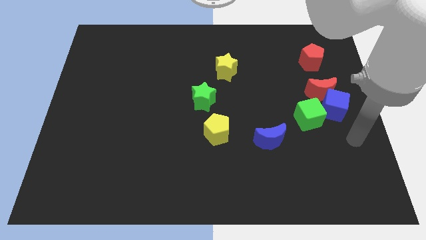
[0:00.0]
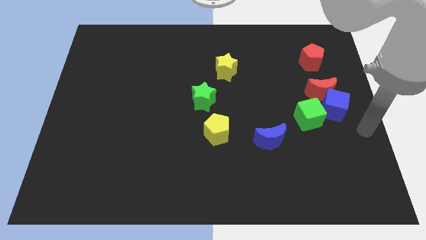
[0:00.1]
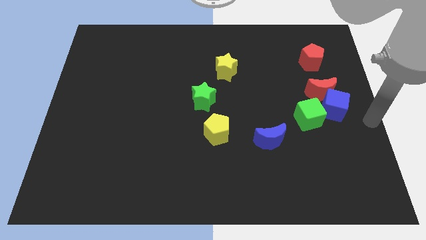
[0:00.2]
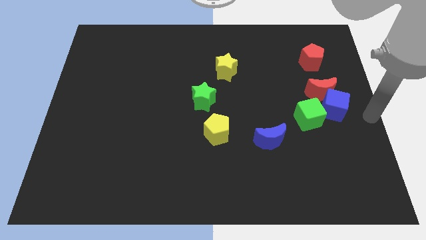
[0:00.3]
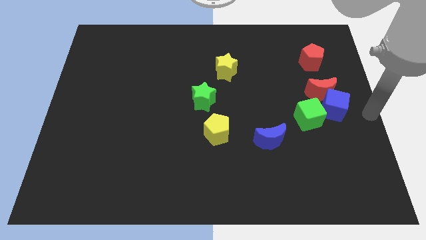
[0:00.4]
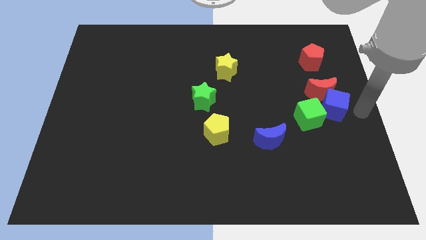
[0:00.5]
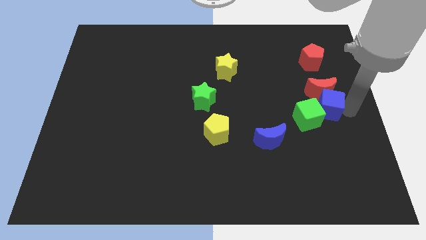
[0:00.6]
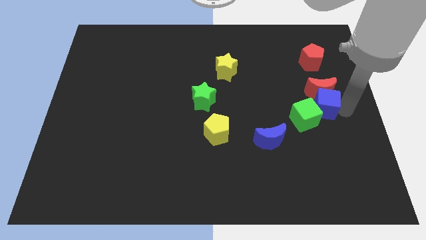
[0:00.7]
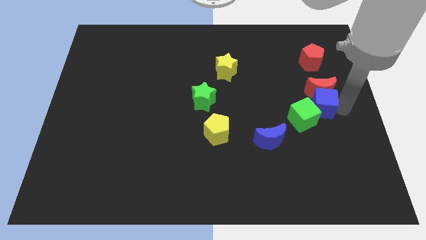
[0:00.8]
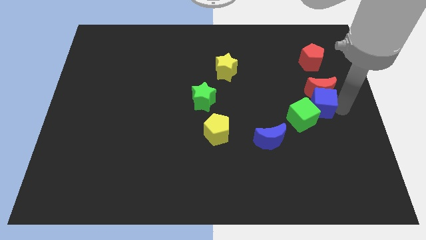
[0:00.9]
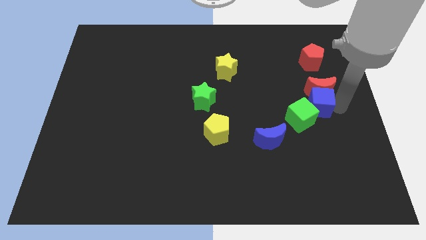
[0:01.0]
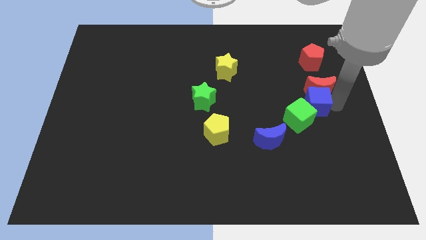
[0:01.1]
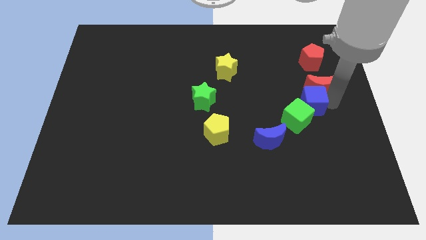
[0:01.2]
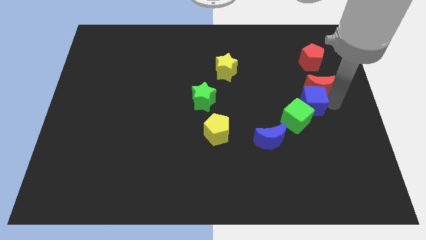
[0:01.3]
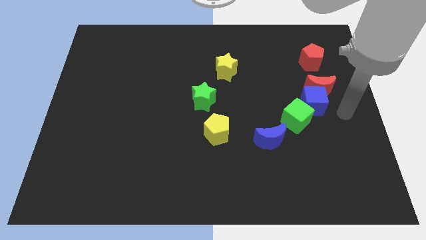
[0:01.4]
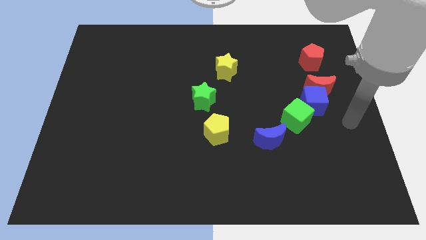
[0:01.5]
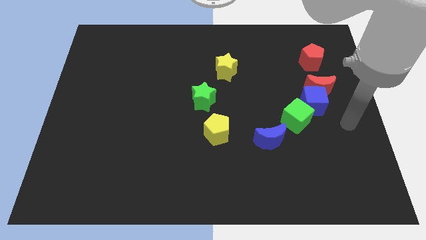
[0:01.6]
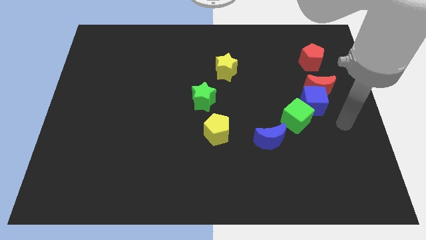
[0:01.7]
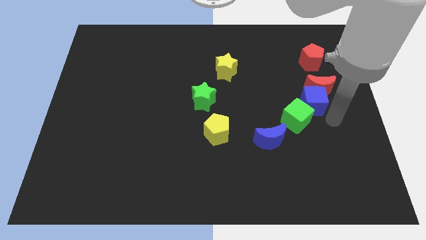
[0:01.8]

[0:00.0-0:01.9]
push the blue cube in between the green cube and the red moon

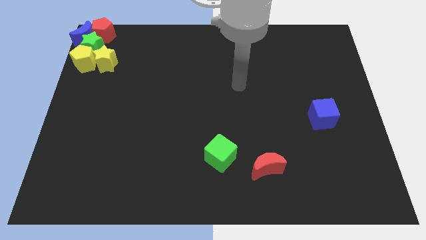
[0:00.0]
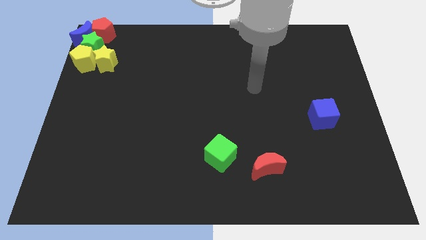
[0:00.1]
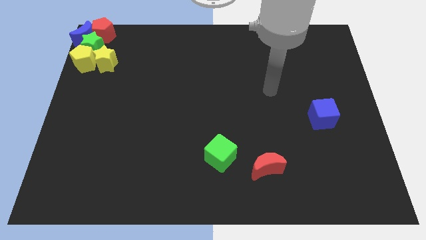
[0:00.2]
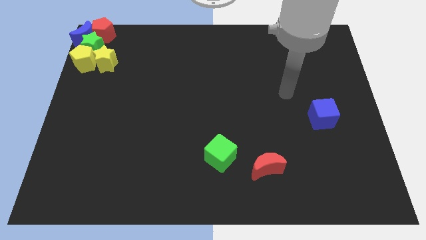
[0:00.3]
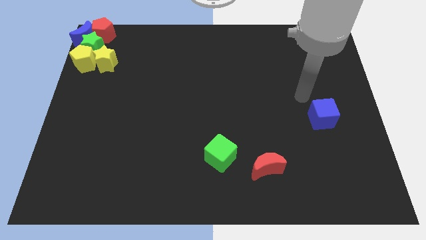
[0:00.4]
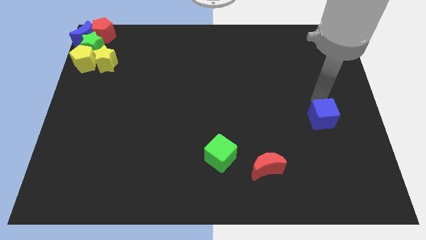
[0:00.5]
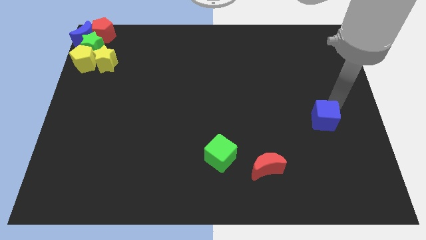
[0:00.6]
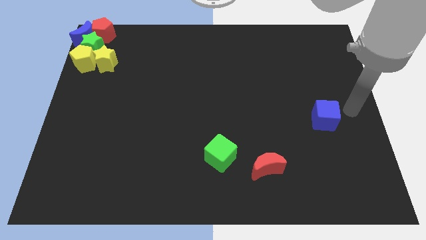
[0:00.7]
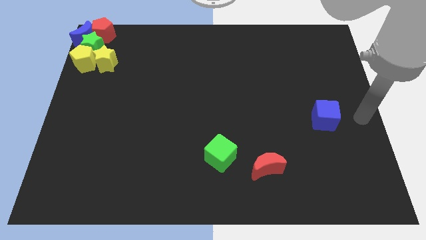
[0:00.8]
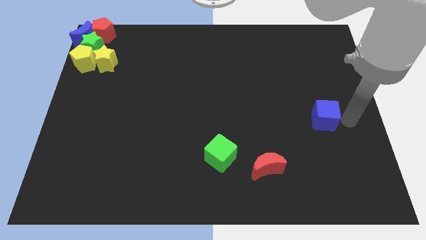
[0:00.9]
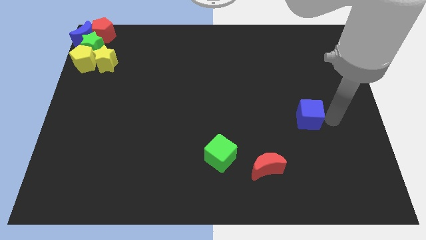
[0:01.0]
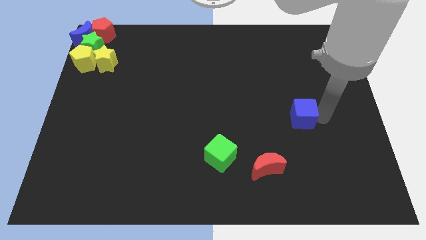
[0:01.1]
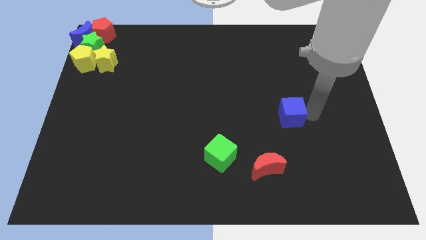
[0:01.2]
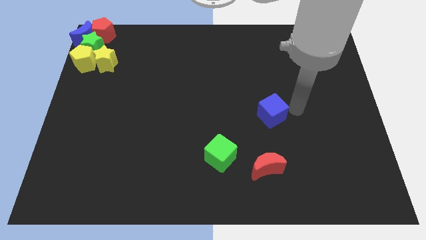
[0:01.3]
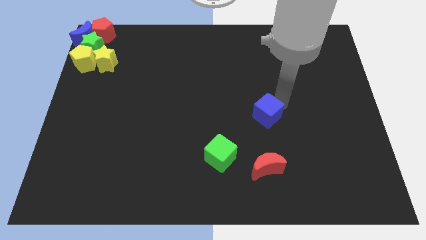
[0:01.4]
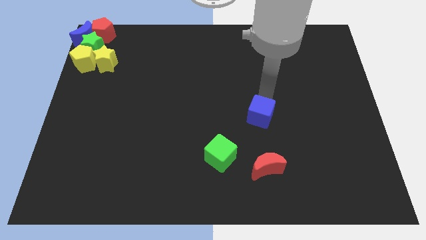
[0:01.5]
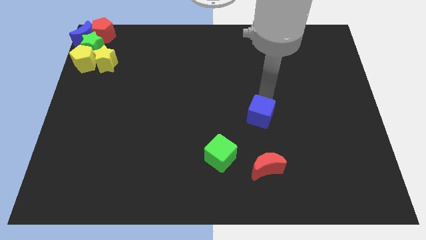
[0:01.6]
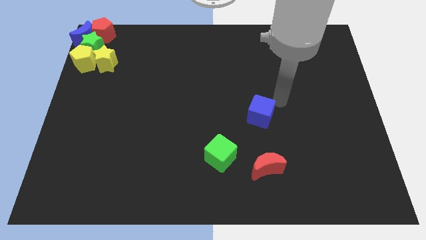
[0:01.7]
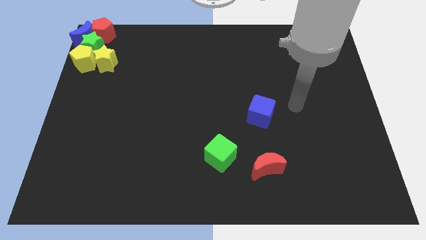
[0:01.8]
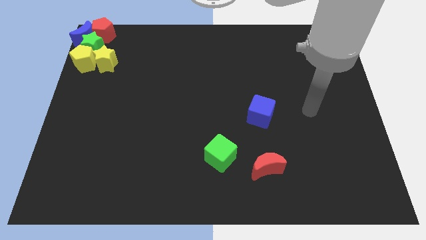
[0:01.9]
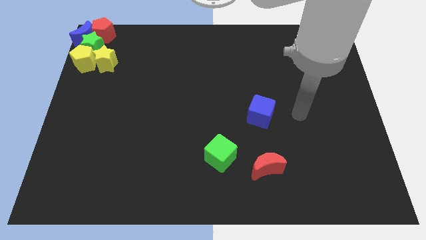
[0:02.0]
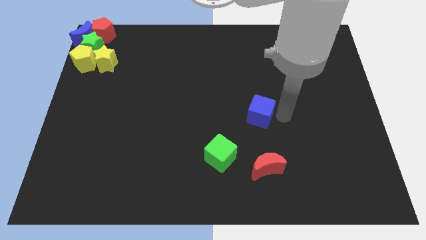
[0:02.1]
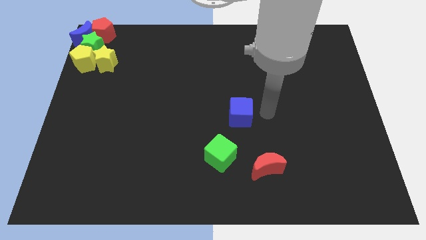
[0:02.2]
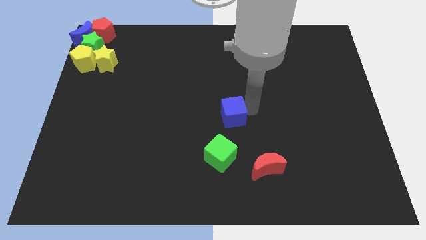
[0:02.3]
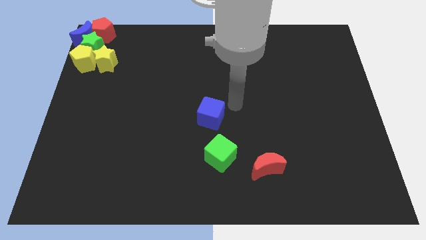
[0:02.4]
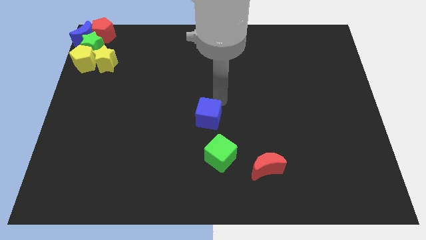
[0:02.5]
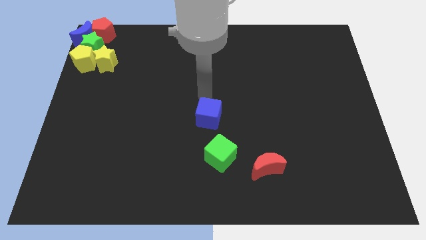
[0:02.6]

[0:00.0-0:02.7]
push the blue cube to the center of the board

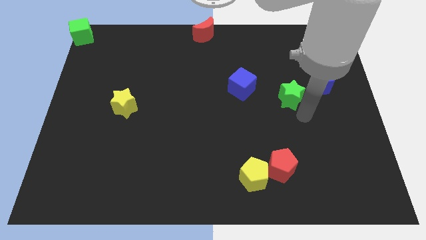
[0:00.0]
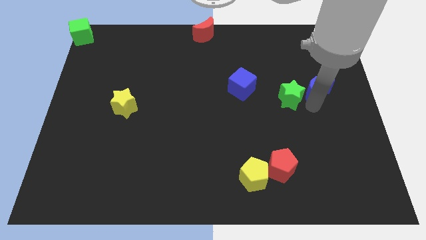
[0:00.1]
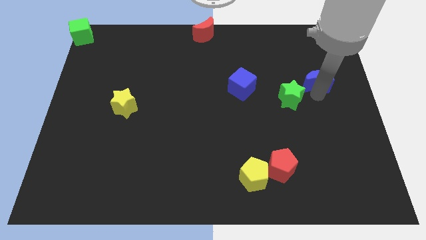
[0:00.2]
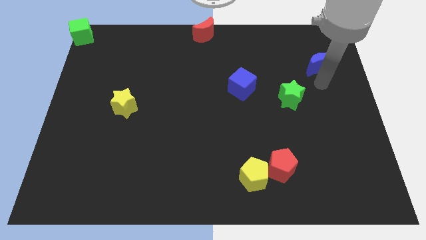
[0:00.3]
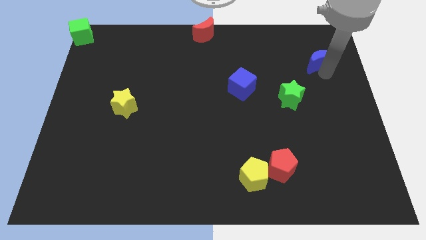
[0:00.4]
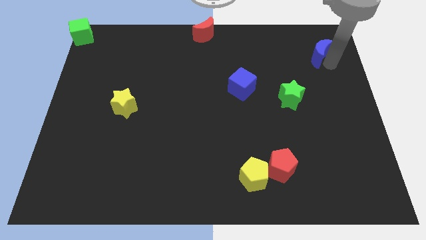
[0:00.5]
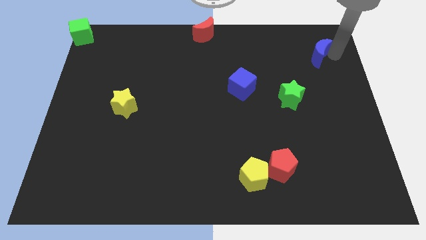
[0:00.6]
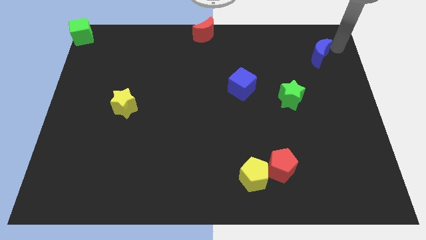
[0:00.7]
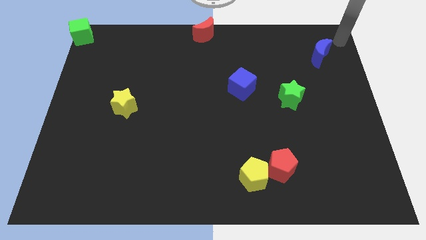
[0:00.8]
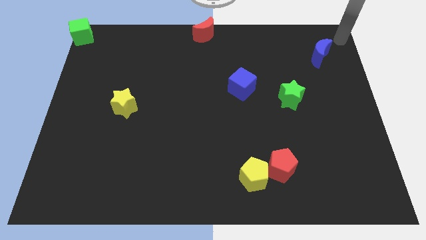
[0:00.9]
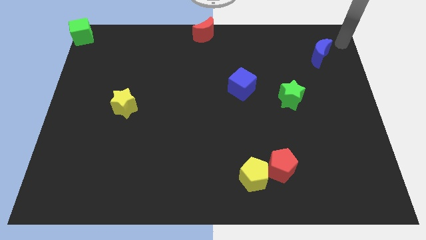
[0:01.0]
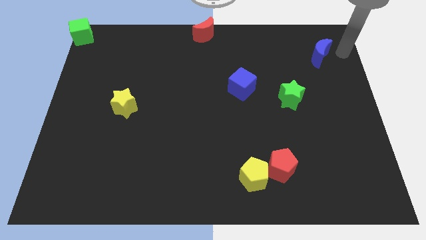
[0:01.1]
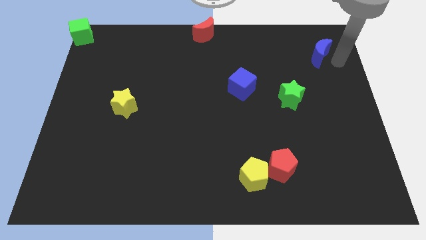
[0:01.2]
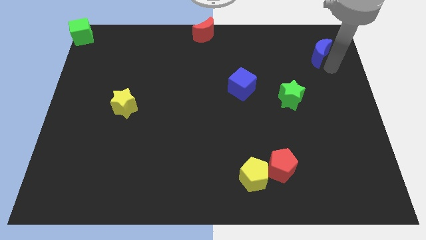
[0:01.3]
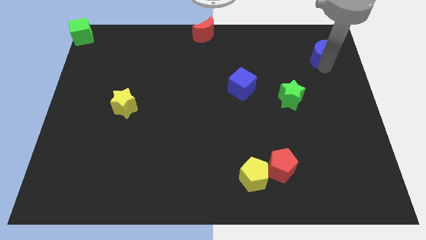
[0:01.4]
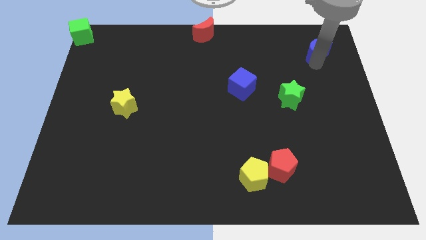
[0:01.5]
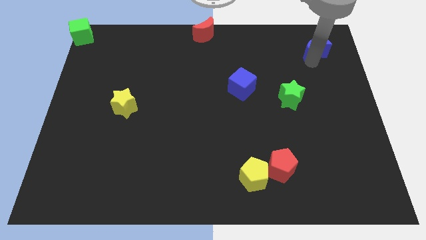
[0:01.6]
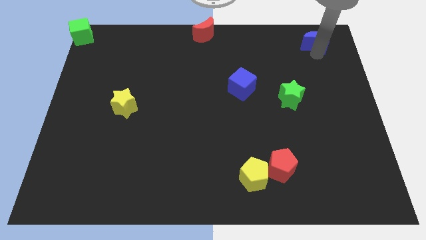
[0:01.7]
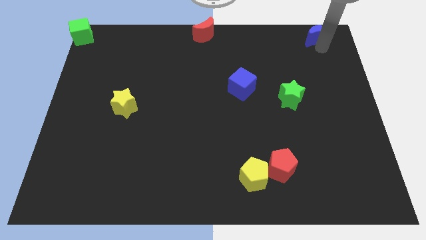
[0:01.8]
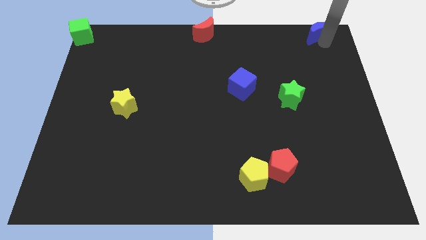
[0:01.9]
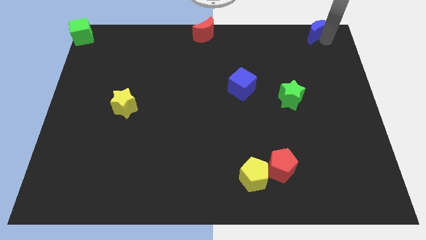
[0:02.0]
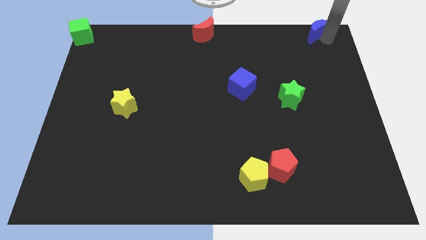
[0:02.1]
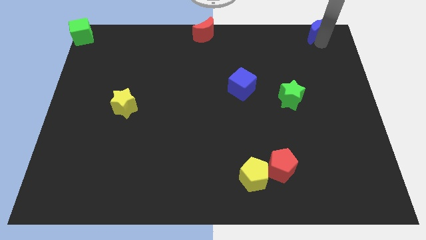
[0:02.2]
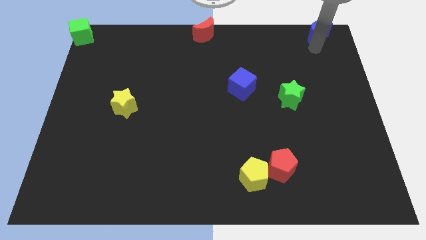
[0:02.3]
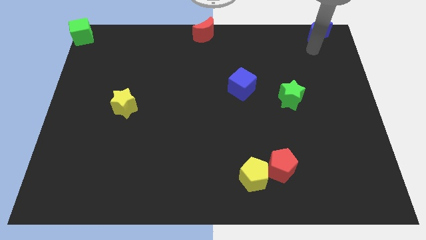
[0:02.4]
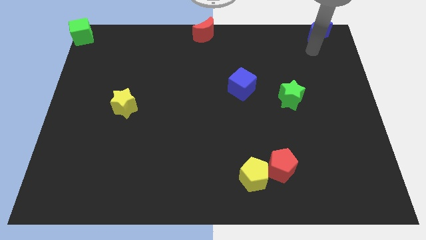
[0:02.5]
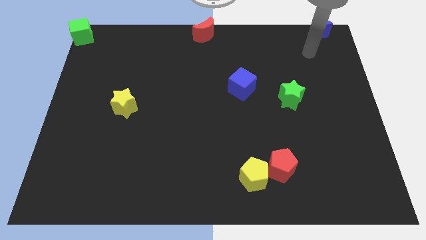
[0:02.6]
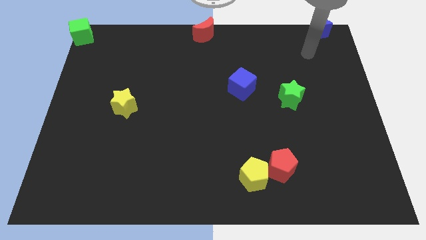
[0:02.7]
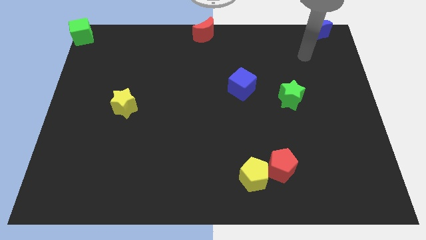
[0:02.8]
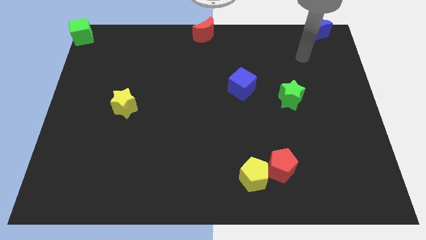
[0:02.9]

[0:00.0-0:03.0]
push the blue crescent towards the top right corner of the board

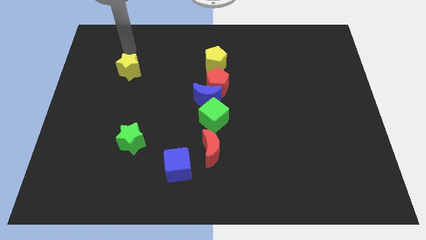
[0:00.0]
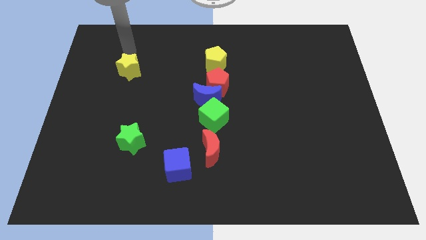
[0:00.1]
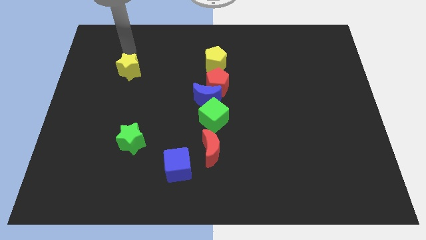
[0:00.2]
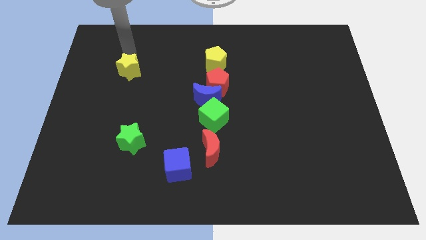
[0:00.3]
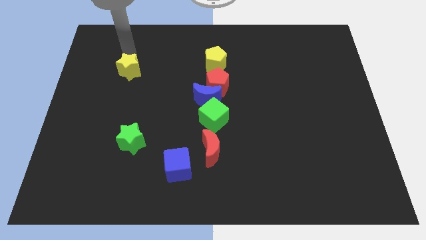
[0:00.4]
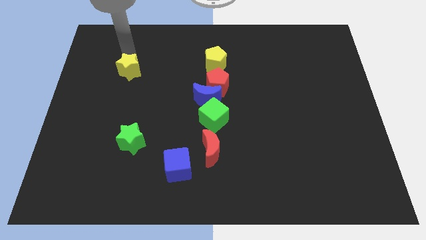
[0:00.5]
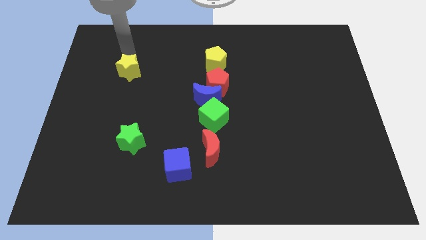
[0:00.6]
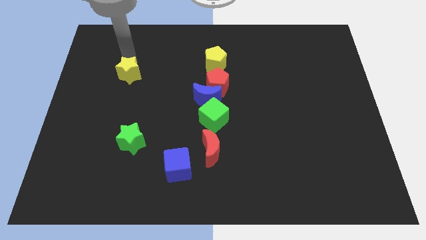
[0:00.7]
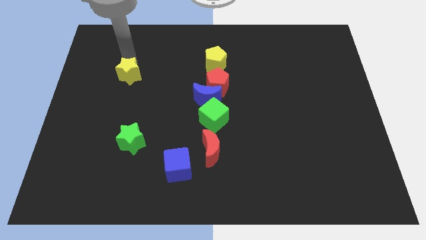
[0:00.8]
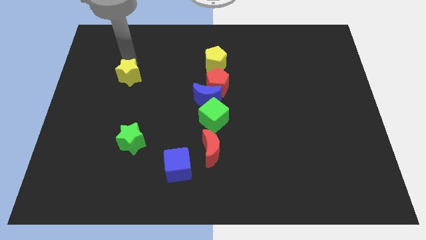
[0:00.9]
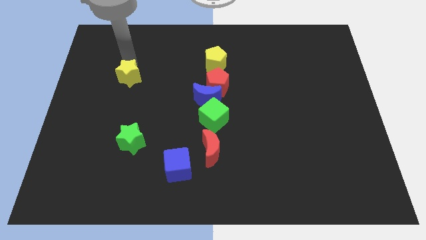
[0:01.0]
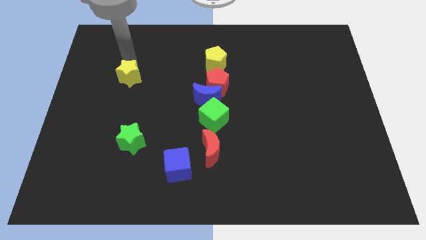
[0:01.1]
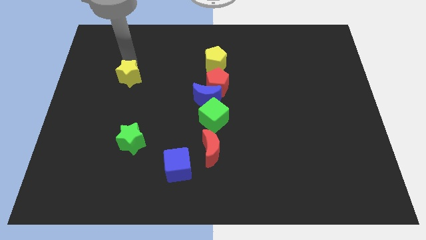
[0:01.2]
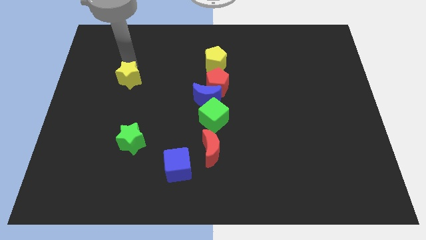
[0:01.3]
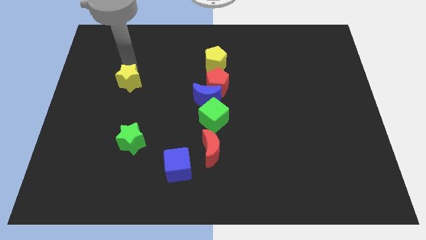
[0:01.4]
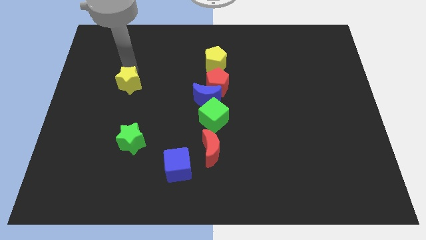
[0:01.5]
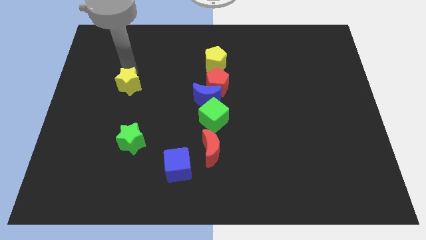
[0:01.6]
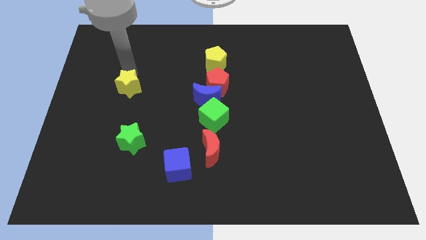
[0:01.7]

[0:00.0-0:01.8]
move the yellow star slightly towards the green star
